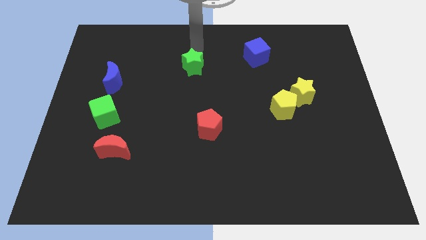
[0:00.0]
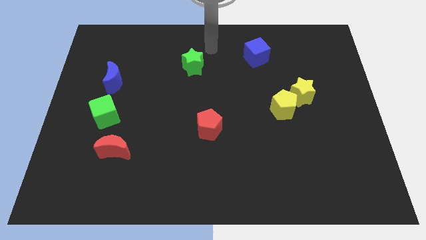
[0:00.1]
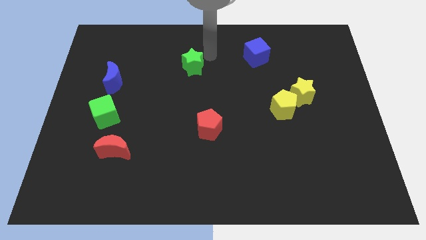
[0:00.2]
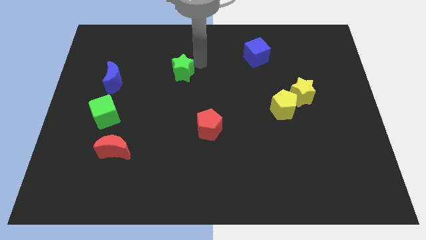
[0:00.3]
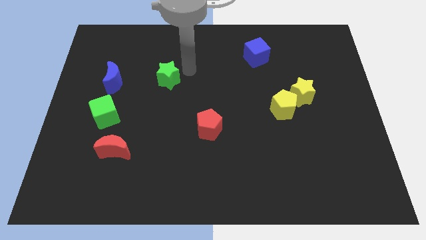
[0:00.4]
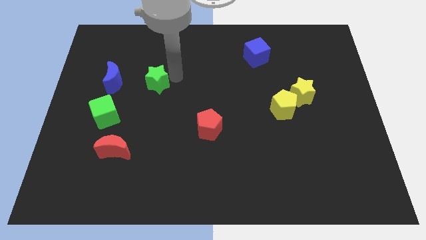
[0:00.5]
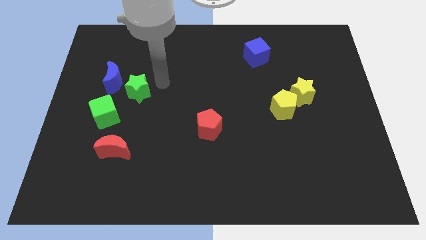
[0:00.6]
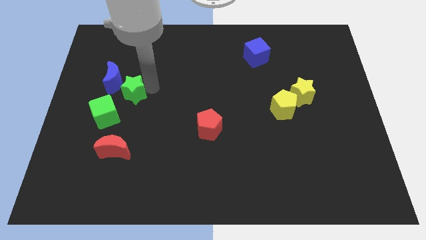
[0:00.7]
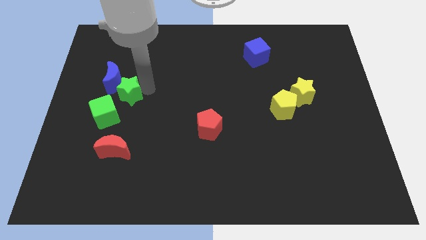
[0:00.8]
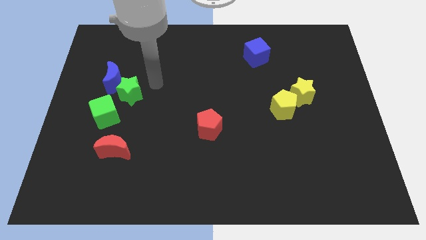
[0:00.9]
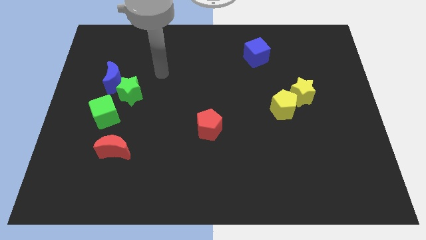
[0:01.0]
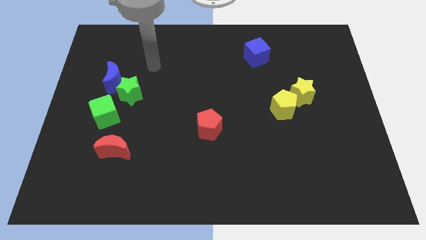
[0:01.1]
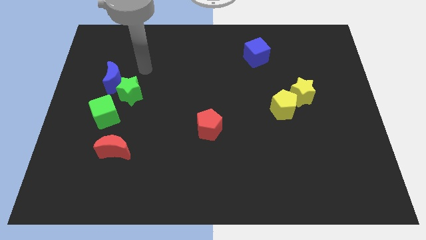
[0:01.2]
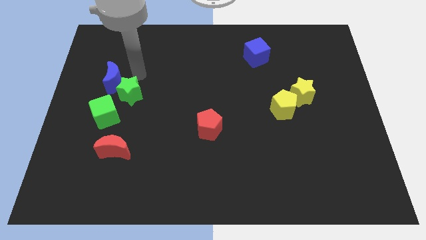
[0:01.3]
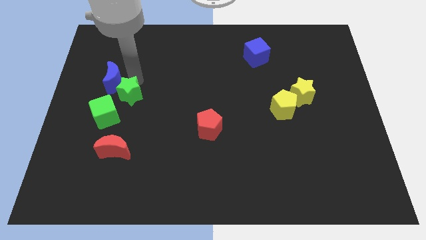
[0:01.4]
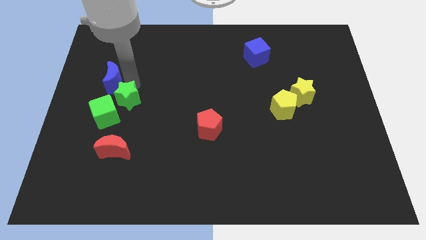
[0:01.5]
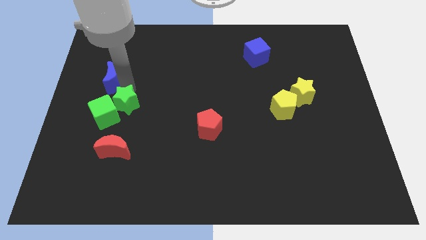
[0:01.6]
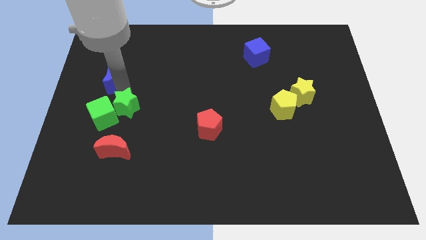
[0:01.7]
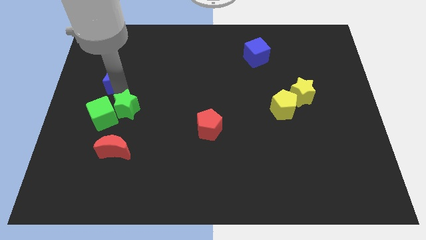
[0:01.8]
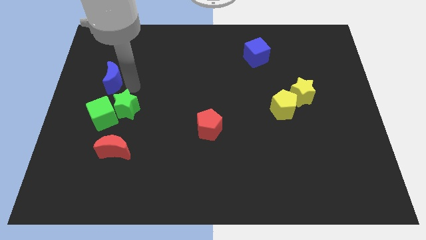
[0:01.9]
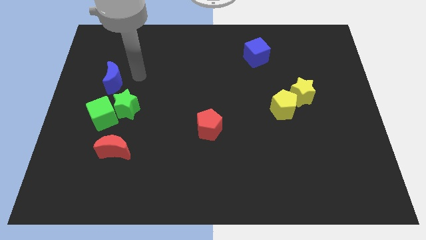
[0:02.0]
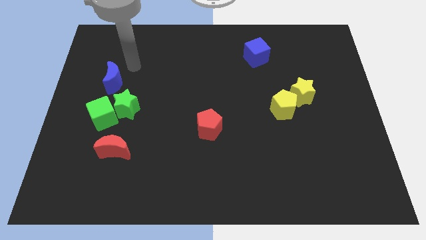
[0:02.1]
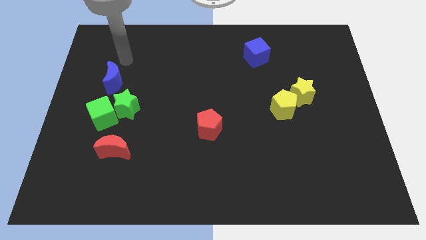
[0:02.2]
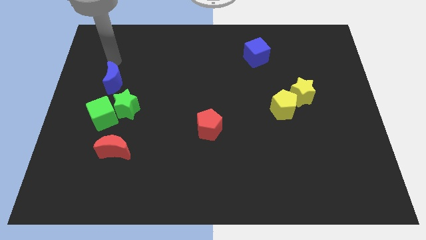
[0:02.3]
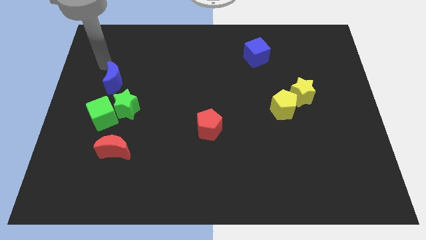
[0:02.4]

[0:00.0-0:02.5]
push the green star into green cube

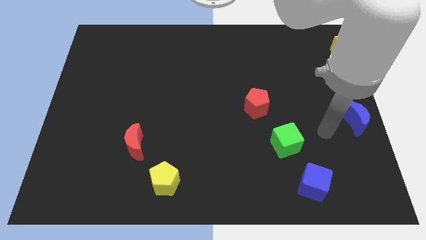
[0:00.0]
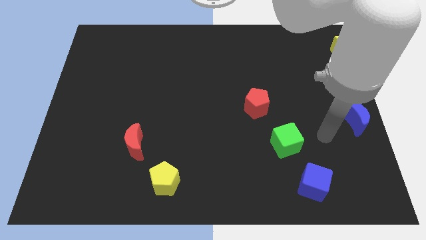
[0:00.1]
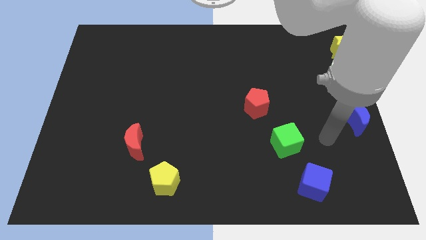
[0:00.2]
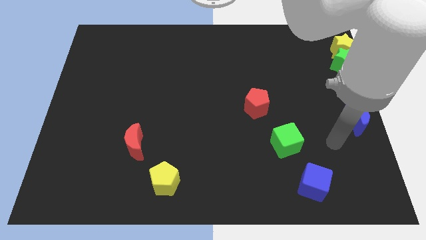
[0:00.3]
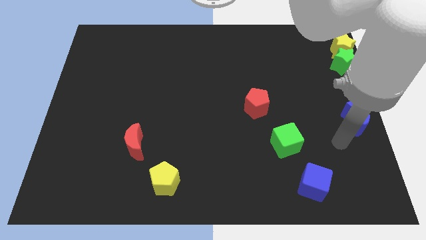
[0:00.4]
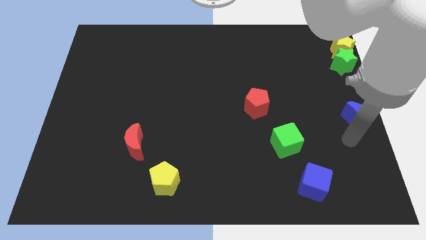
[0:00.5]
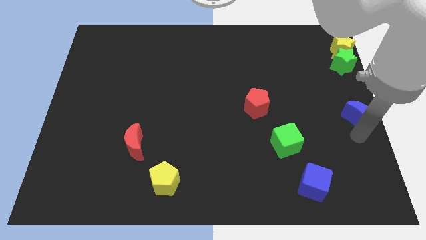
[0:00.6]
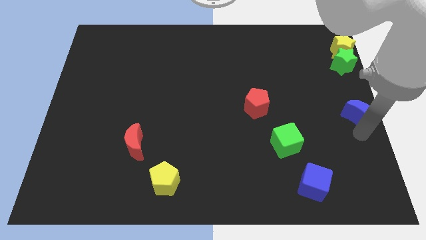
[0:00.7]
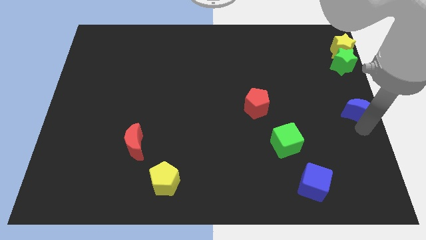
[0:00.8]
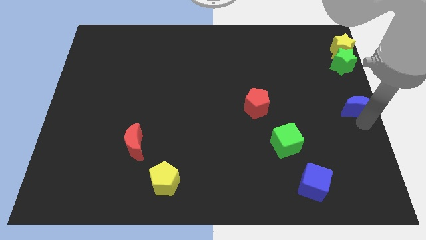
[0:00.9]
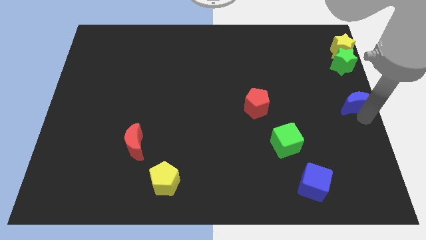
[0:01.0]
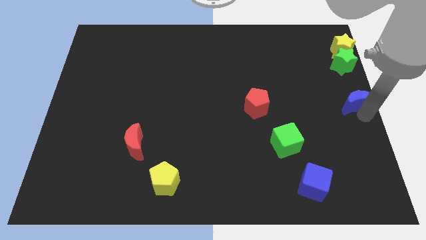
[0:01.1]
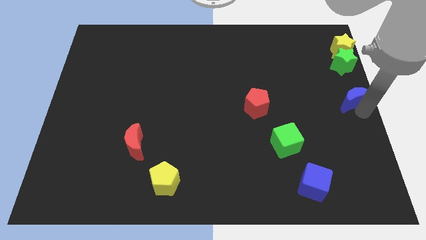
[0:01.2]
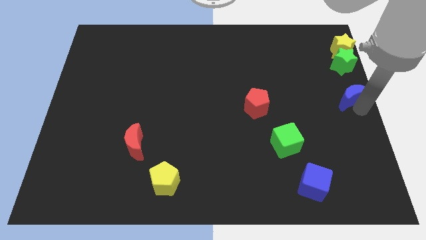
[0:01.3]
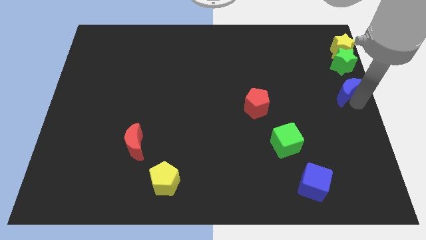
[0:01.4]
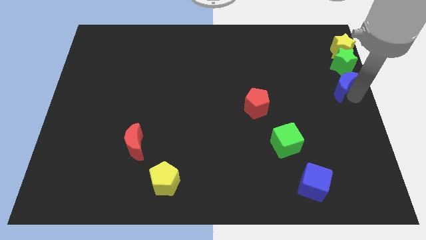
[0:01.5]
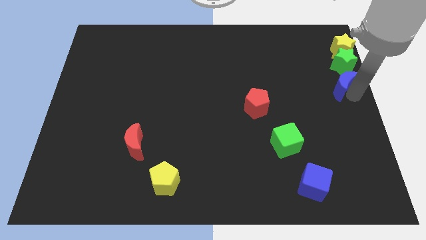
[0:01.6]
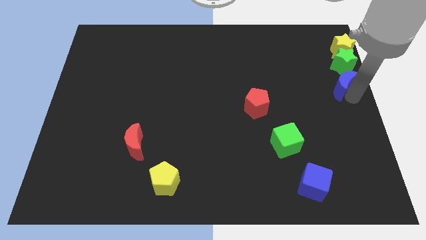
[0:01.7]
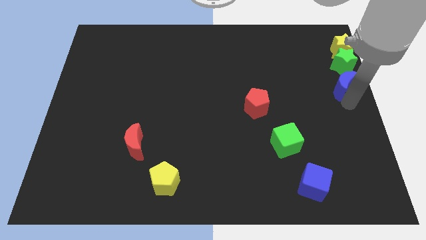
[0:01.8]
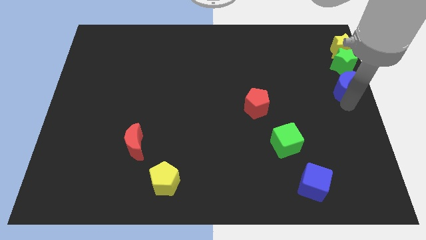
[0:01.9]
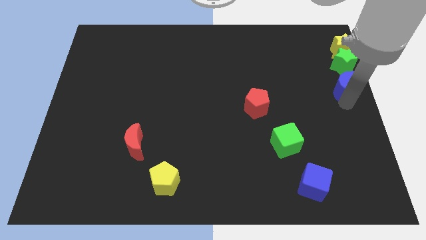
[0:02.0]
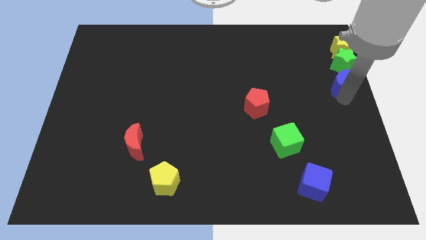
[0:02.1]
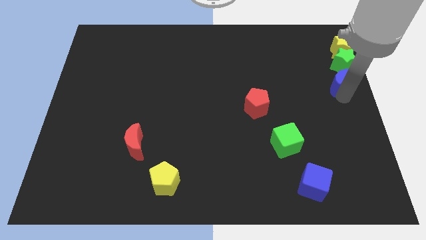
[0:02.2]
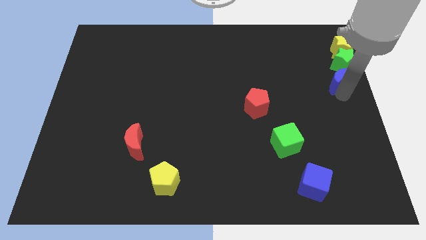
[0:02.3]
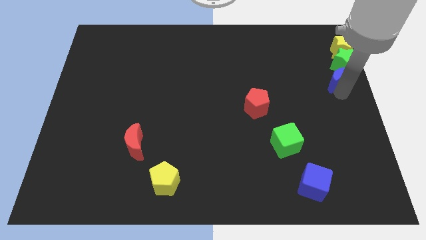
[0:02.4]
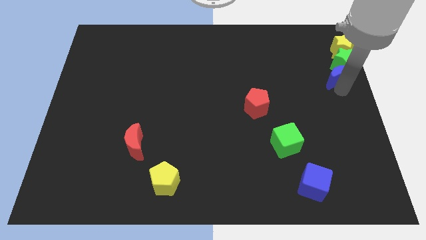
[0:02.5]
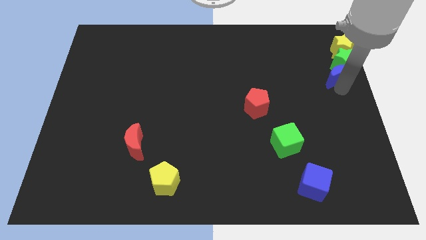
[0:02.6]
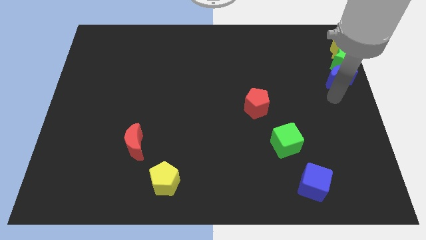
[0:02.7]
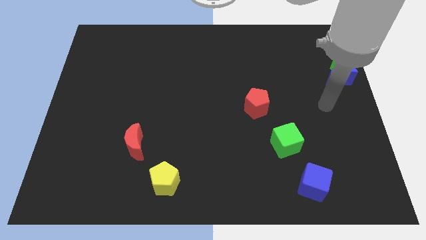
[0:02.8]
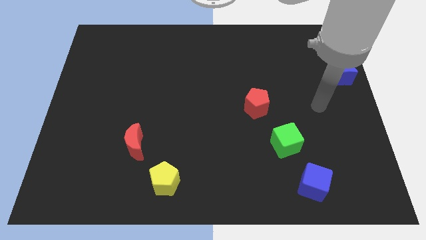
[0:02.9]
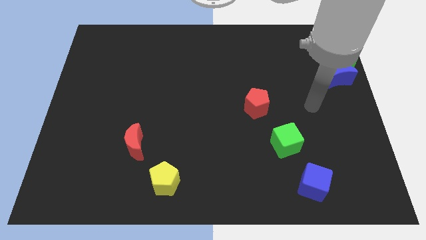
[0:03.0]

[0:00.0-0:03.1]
place blue crescent below to the green star

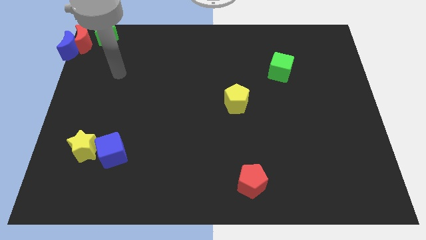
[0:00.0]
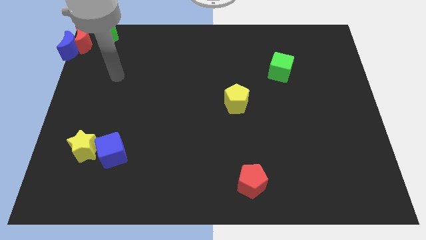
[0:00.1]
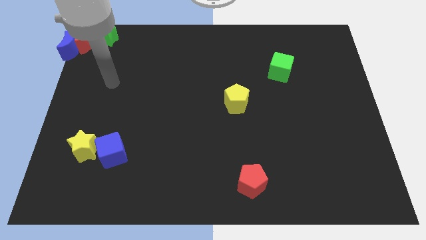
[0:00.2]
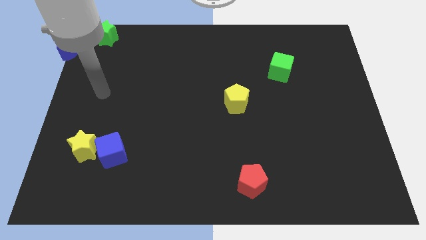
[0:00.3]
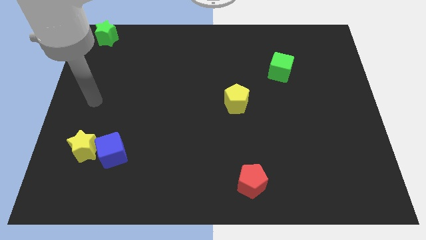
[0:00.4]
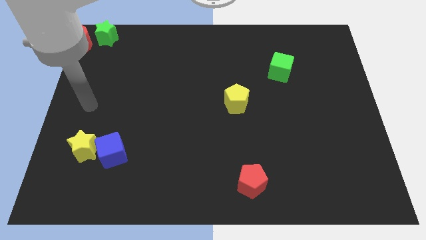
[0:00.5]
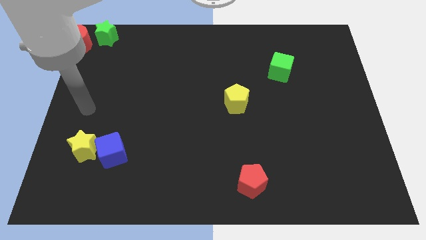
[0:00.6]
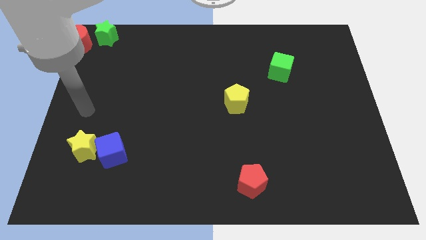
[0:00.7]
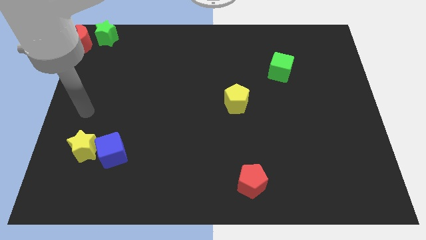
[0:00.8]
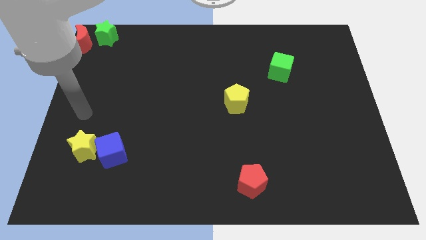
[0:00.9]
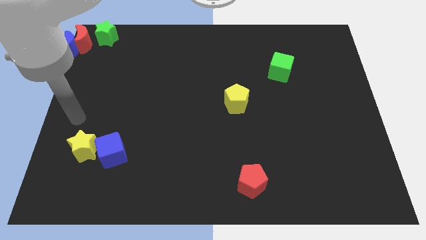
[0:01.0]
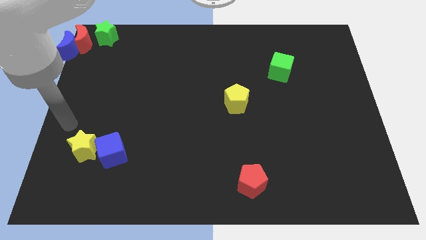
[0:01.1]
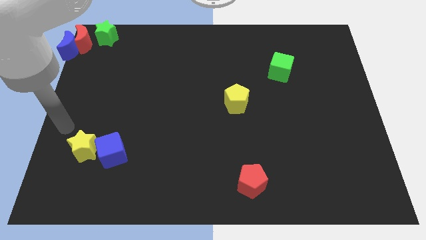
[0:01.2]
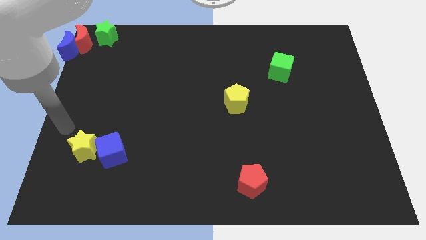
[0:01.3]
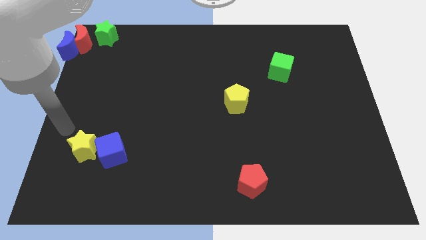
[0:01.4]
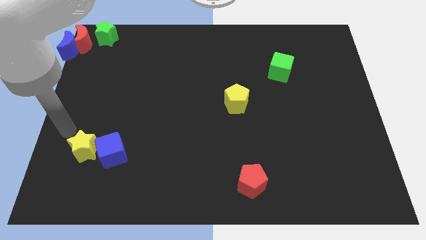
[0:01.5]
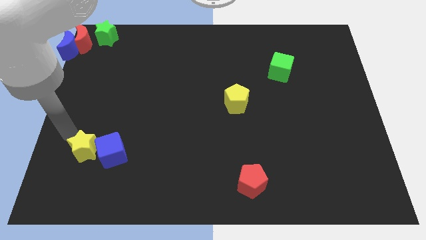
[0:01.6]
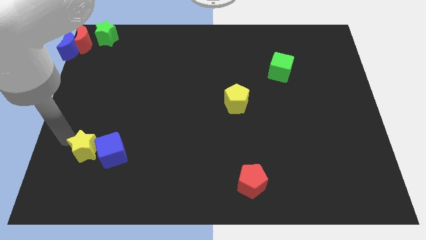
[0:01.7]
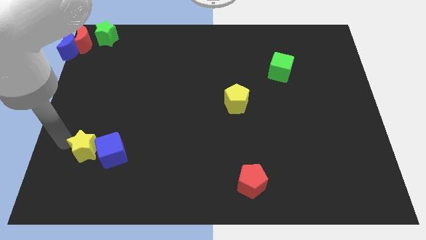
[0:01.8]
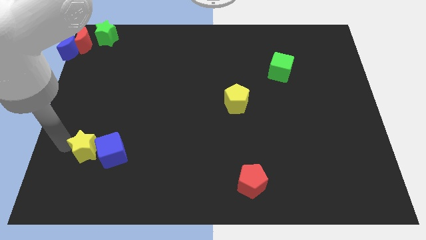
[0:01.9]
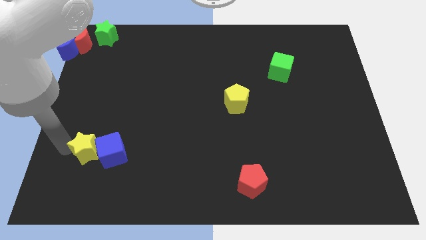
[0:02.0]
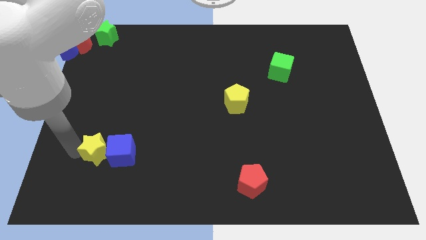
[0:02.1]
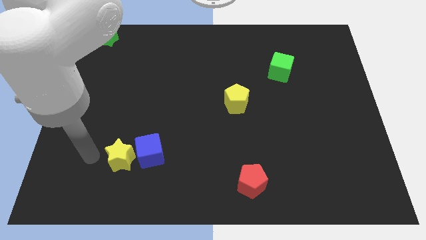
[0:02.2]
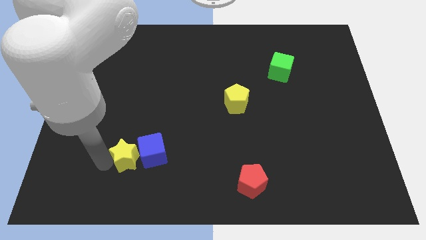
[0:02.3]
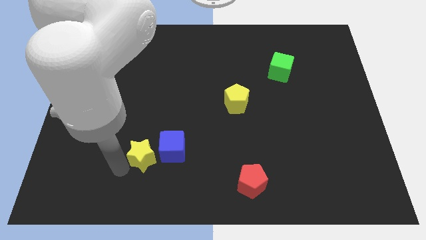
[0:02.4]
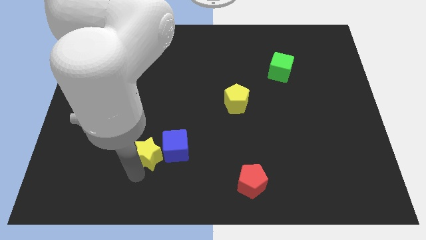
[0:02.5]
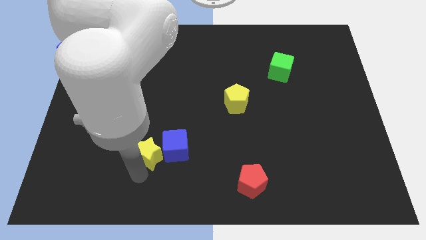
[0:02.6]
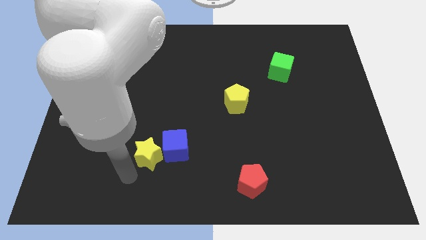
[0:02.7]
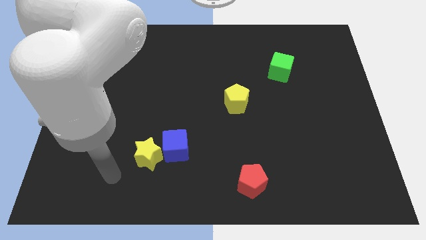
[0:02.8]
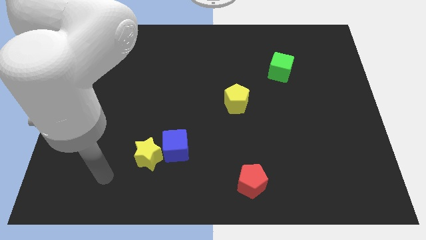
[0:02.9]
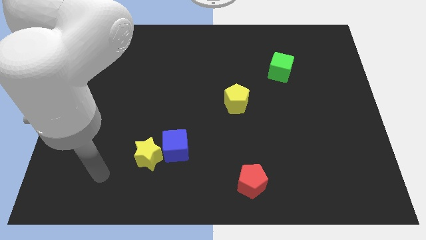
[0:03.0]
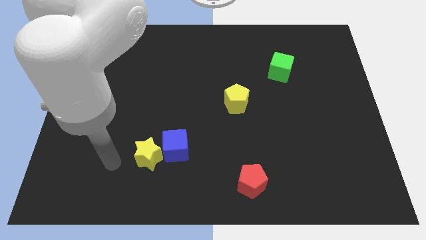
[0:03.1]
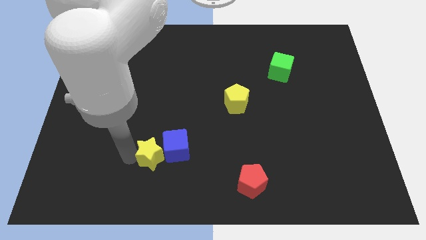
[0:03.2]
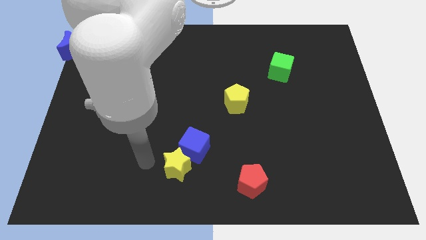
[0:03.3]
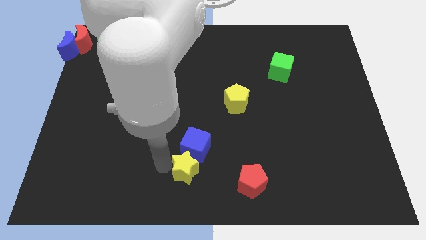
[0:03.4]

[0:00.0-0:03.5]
move the yellow star and the blue cube towards the bottom center
